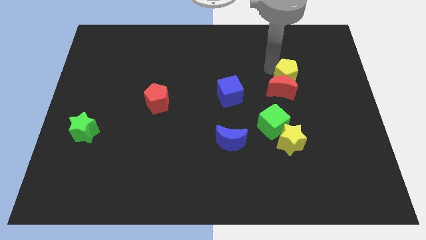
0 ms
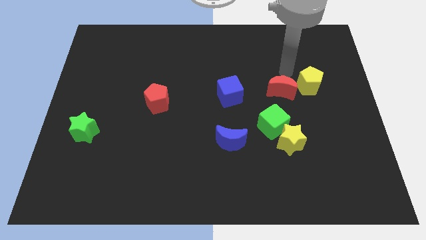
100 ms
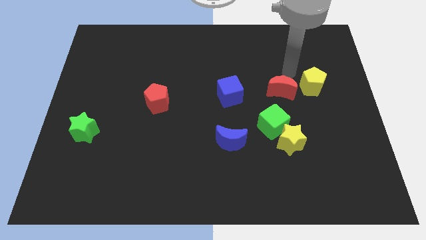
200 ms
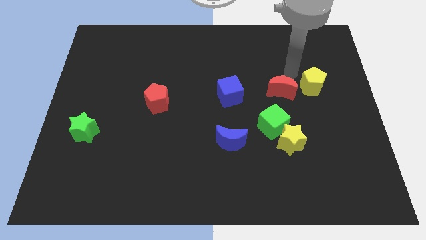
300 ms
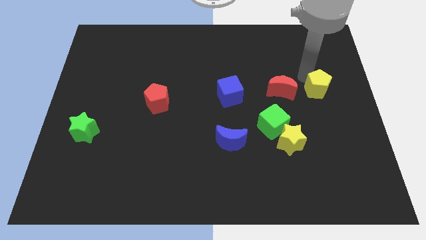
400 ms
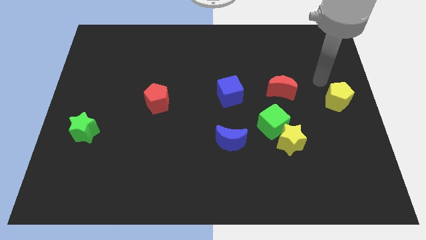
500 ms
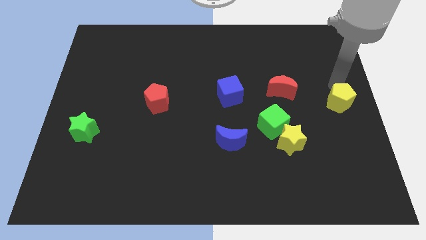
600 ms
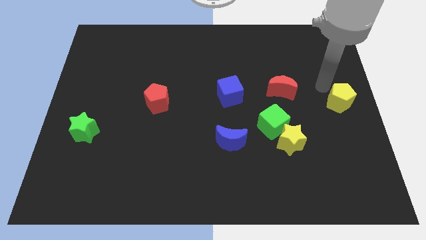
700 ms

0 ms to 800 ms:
move the yellow pentagon to the center right of the board

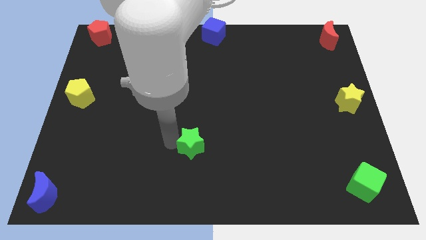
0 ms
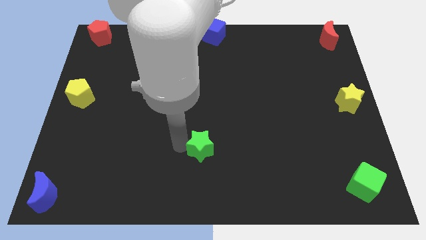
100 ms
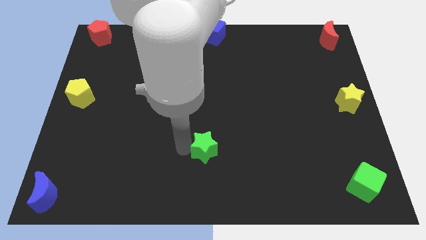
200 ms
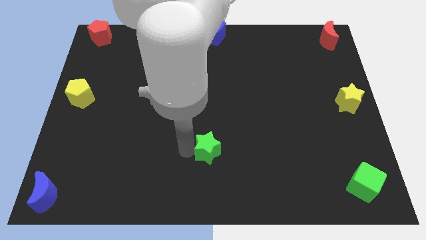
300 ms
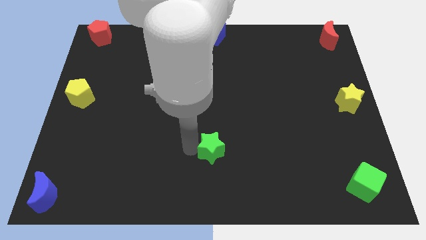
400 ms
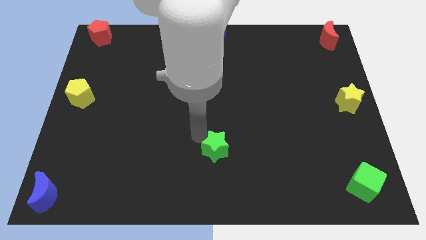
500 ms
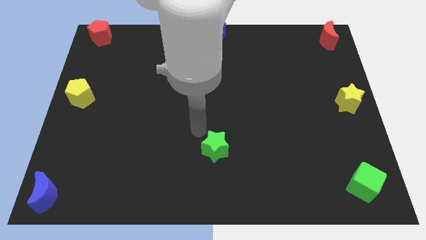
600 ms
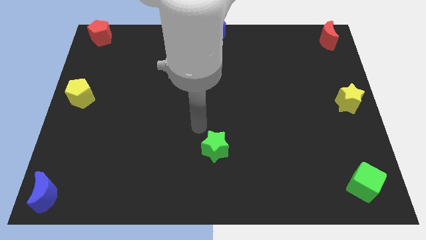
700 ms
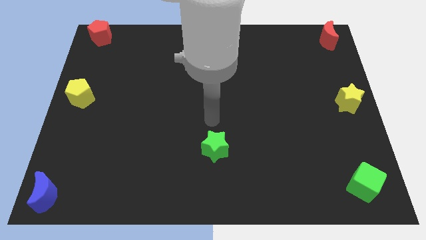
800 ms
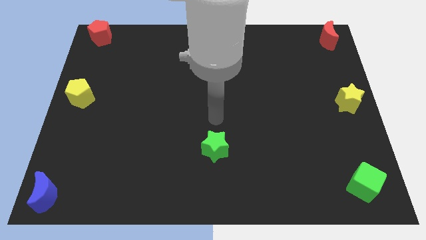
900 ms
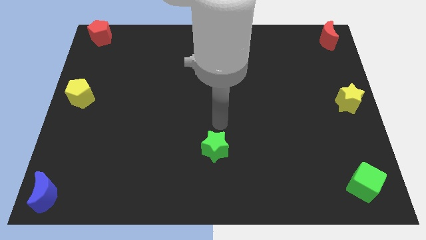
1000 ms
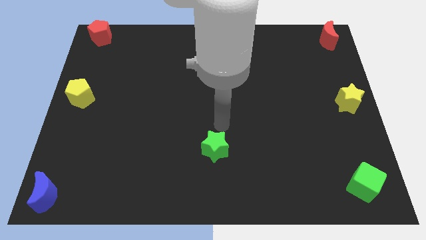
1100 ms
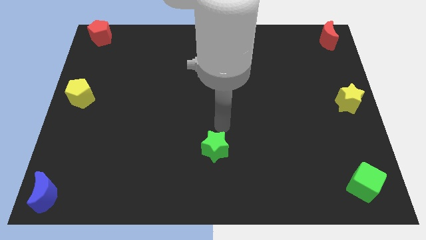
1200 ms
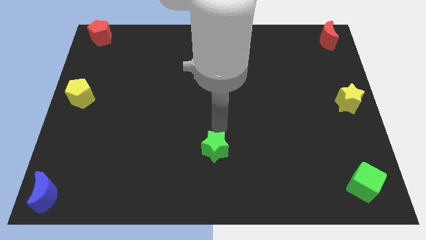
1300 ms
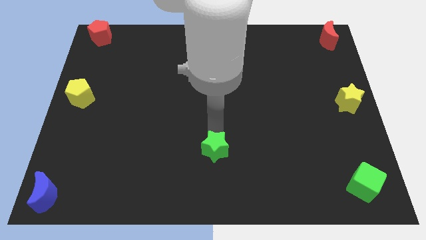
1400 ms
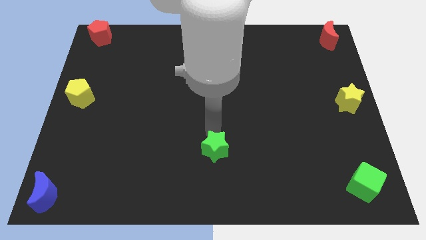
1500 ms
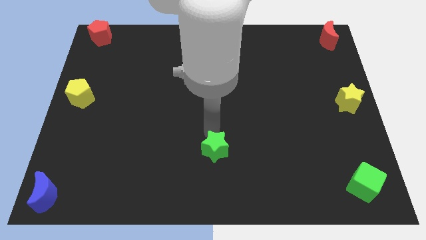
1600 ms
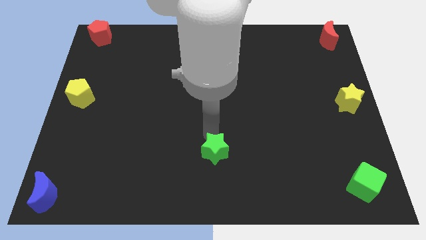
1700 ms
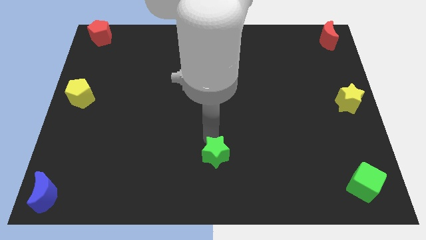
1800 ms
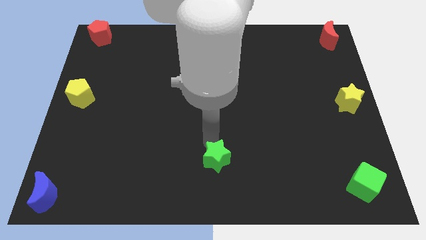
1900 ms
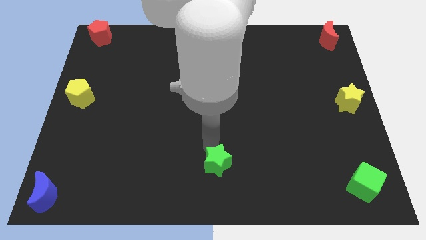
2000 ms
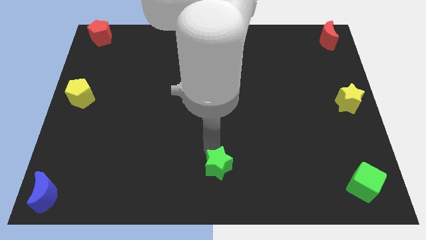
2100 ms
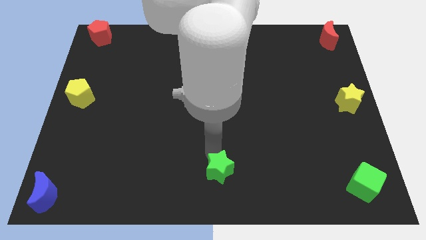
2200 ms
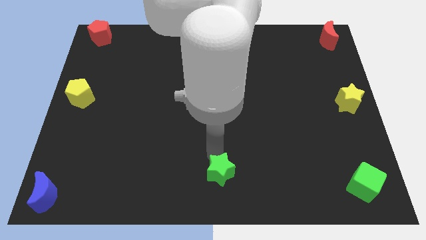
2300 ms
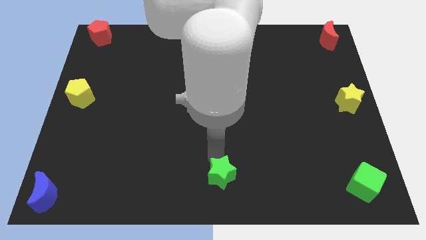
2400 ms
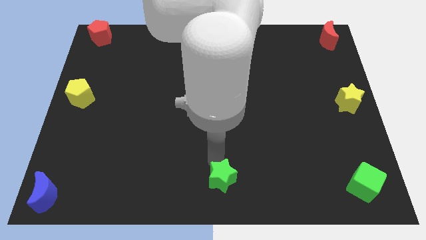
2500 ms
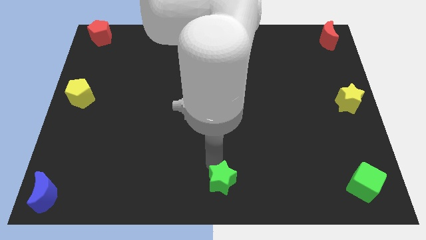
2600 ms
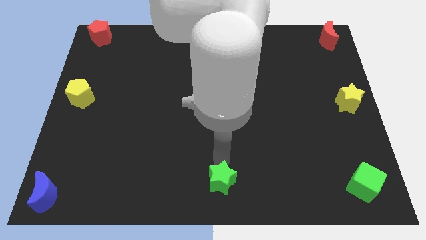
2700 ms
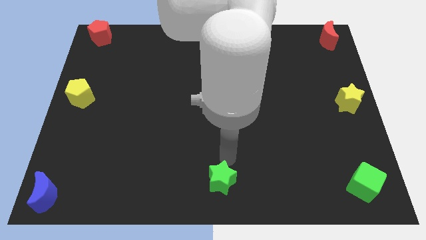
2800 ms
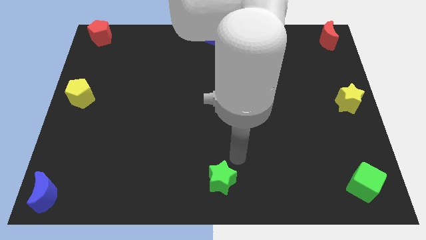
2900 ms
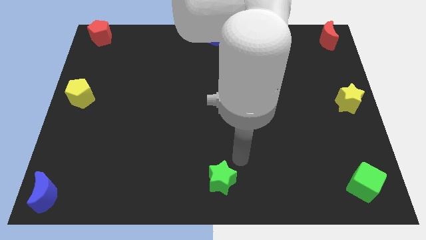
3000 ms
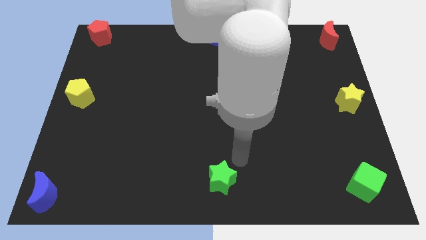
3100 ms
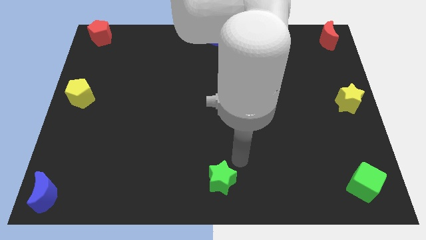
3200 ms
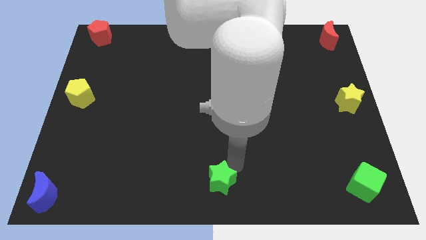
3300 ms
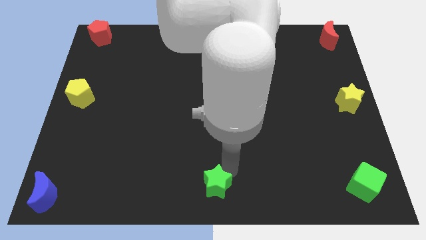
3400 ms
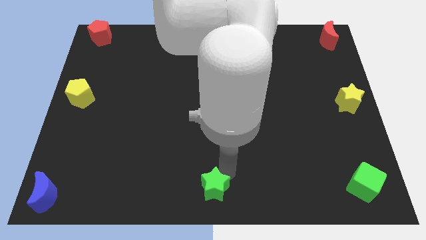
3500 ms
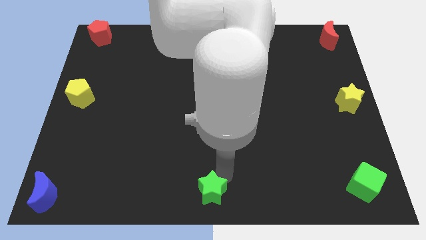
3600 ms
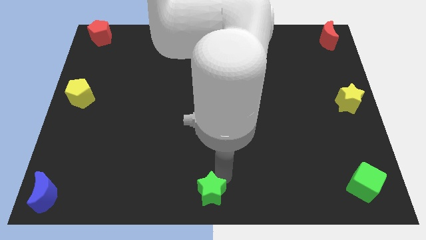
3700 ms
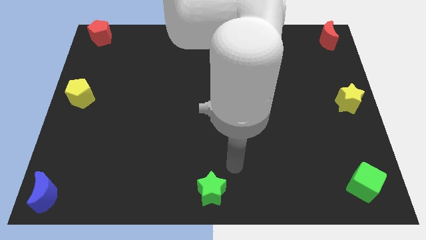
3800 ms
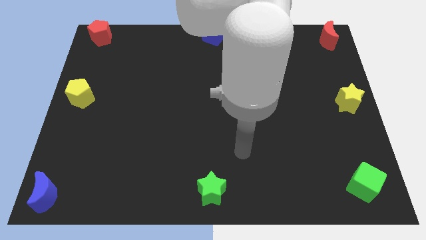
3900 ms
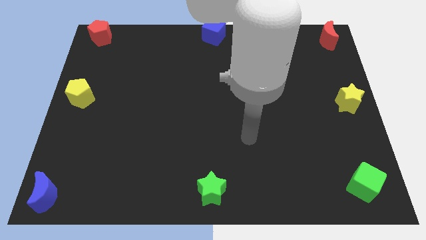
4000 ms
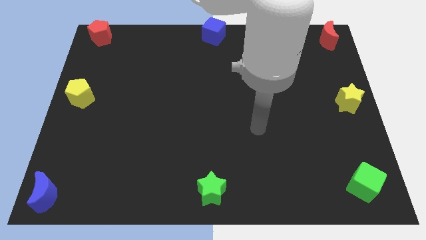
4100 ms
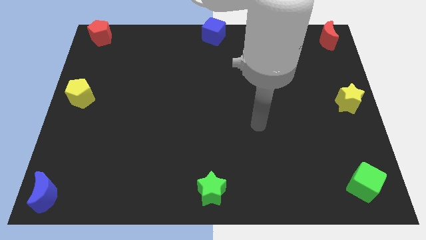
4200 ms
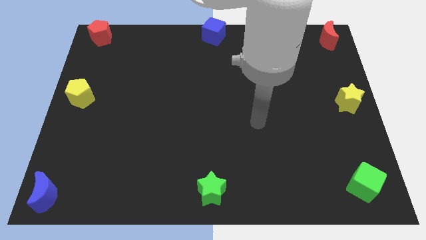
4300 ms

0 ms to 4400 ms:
place the green star at the bottom center of the board

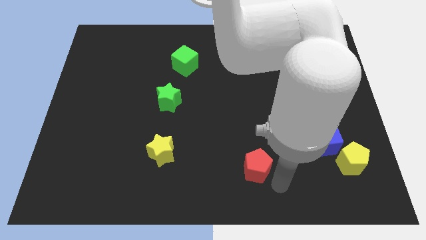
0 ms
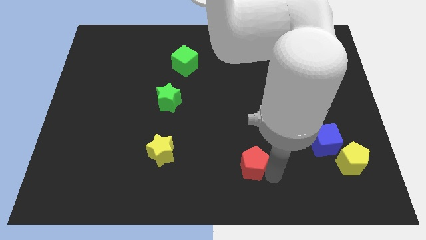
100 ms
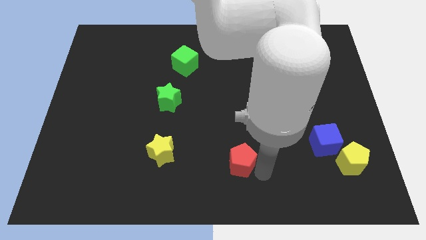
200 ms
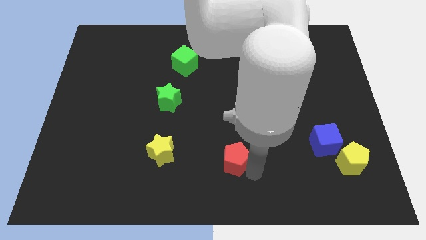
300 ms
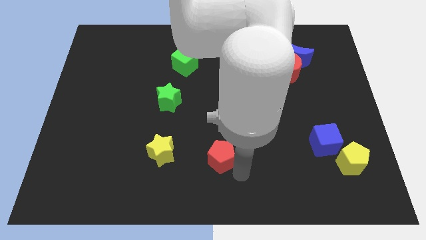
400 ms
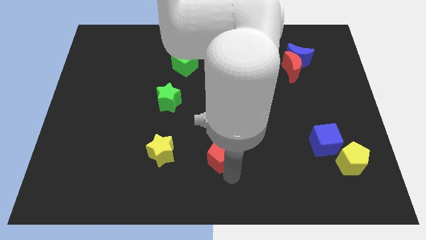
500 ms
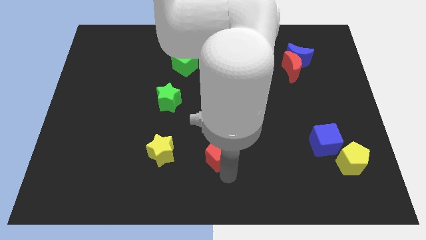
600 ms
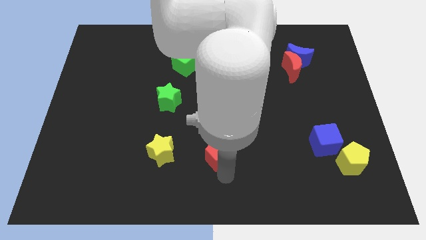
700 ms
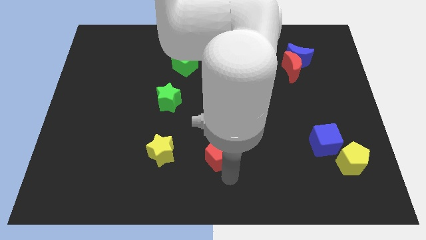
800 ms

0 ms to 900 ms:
place red pentagon to the left of yellow star

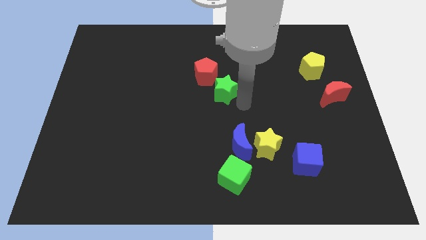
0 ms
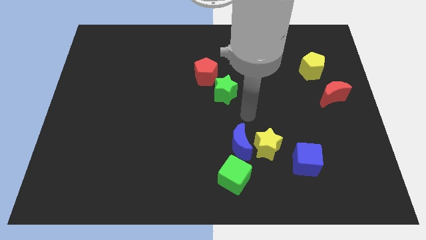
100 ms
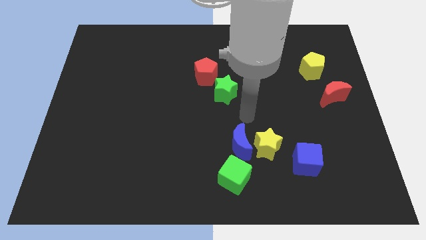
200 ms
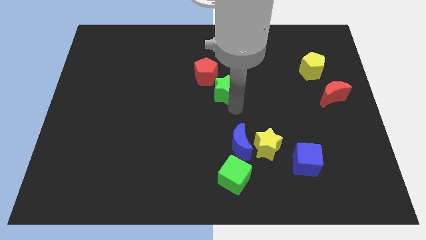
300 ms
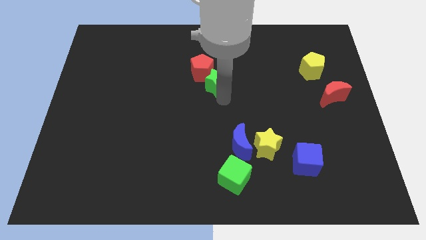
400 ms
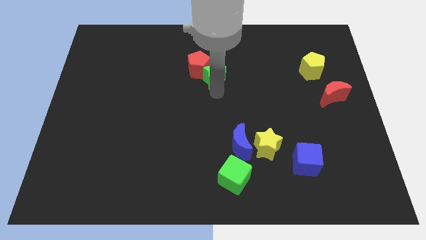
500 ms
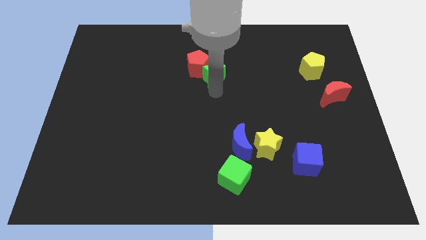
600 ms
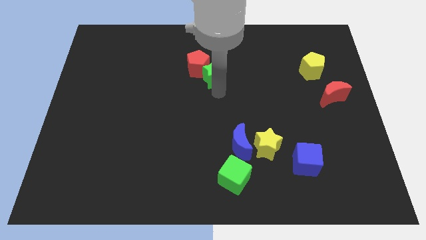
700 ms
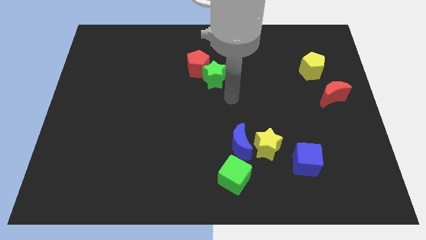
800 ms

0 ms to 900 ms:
push the green star into the red pentagon

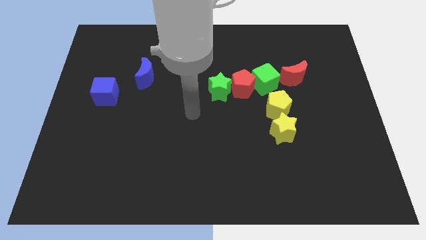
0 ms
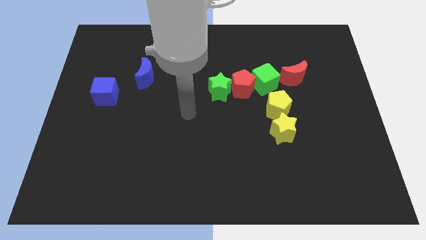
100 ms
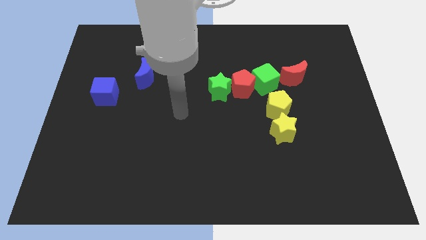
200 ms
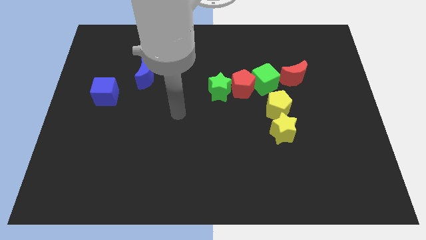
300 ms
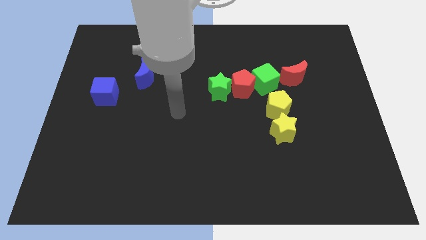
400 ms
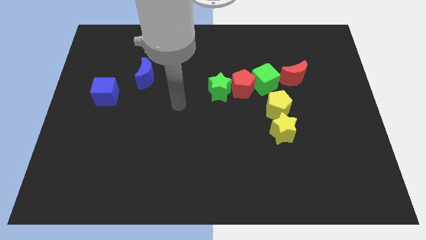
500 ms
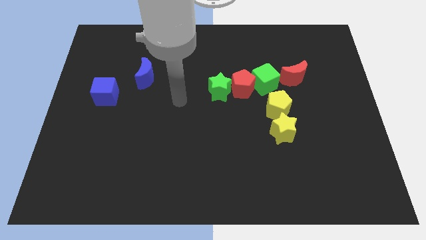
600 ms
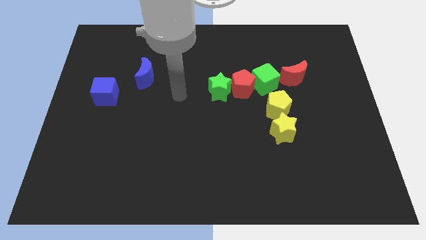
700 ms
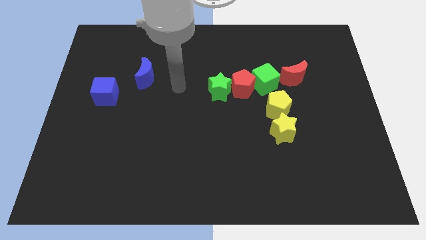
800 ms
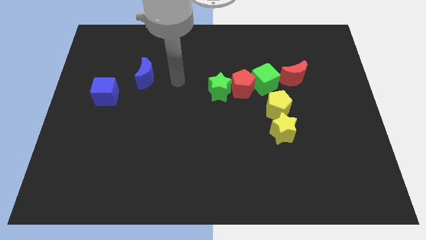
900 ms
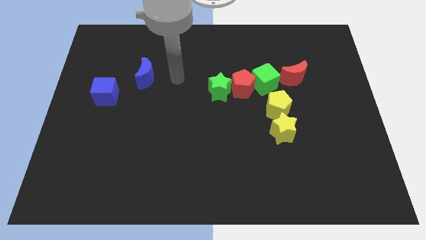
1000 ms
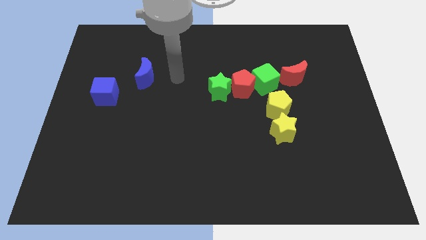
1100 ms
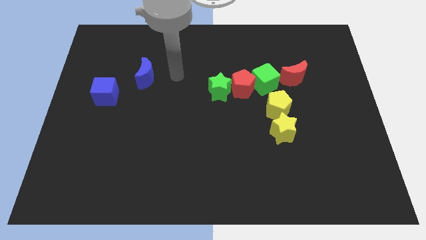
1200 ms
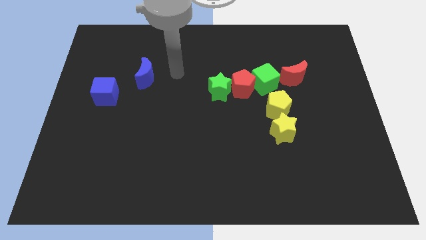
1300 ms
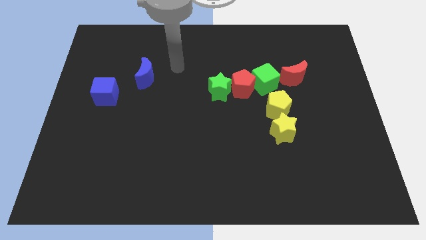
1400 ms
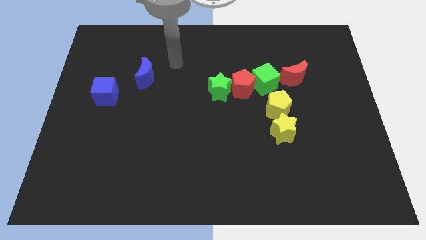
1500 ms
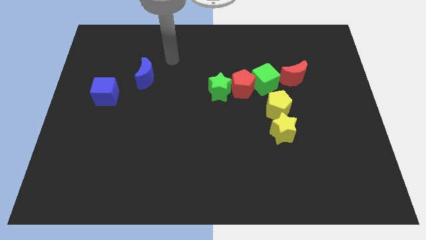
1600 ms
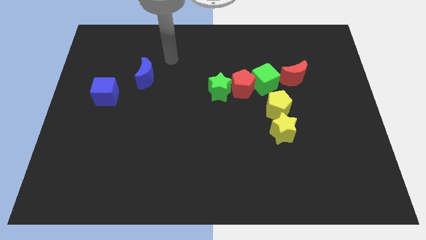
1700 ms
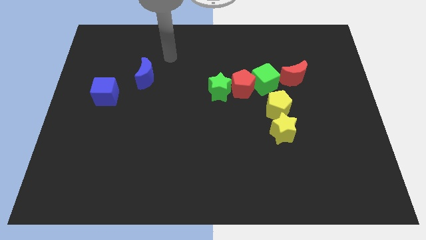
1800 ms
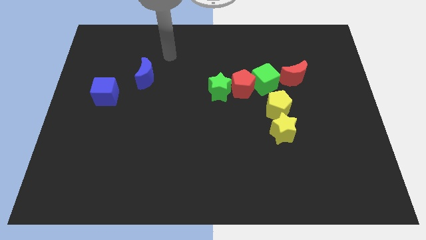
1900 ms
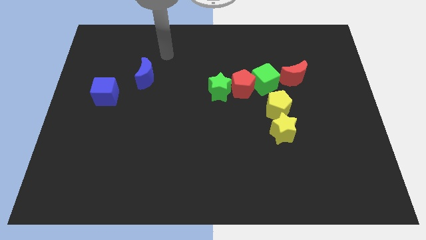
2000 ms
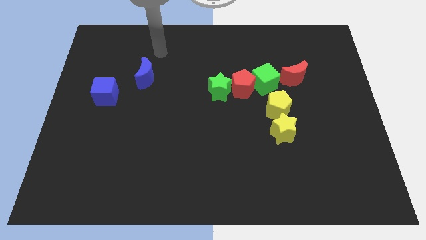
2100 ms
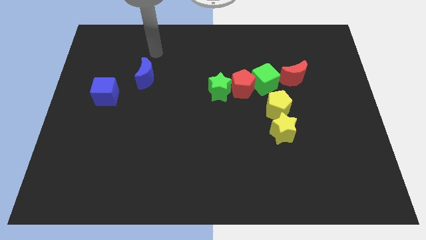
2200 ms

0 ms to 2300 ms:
move your arm to the top of the blue crescent
